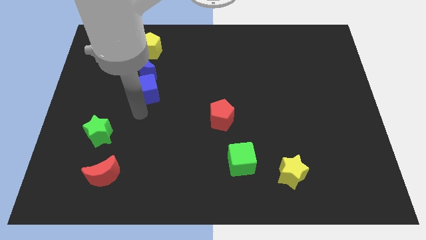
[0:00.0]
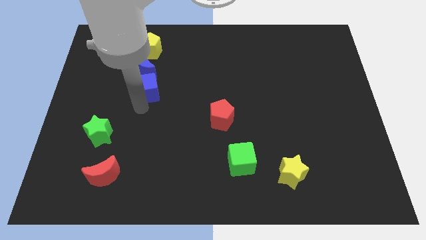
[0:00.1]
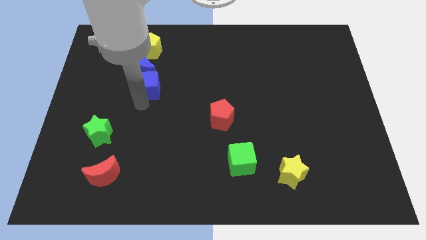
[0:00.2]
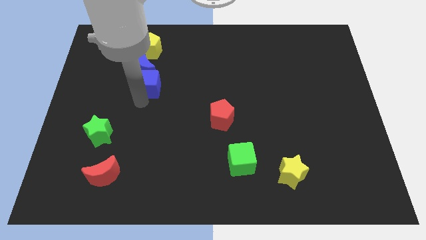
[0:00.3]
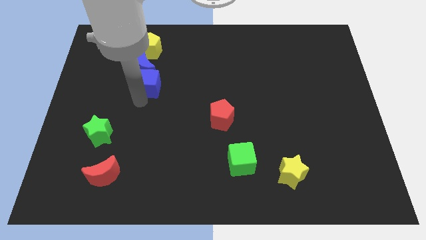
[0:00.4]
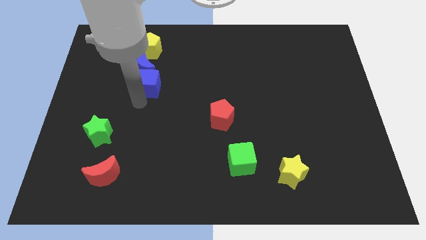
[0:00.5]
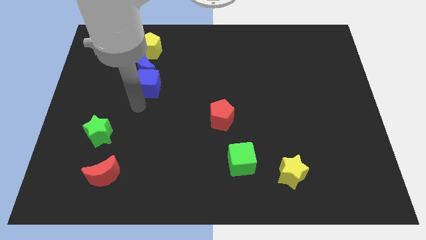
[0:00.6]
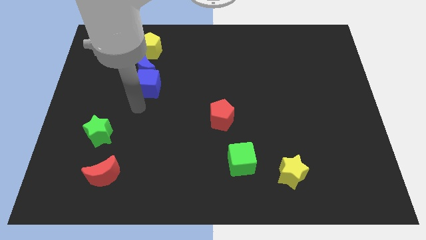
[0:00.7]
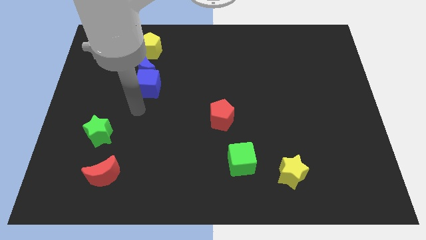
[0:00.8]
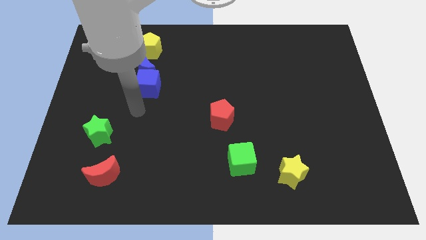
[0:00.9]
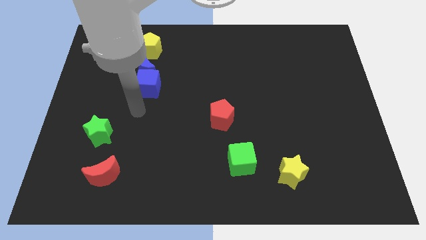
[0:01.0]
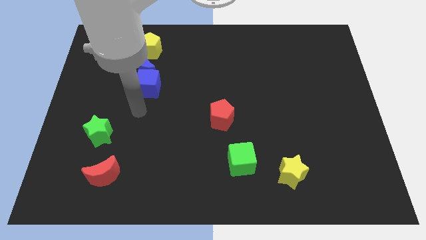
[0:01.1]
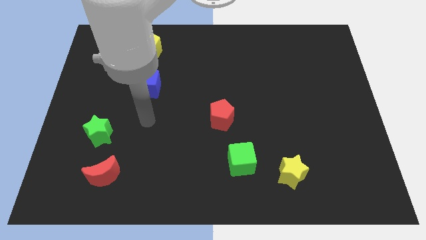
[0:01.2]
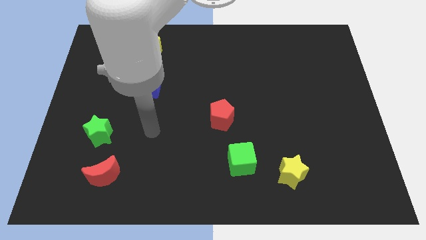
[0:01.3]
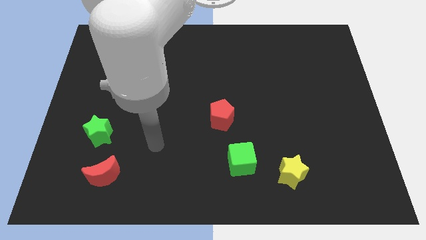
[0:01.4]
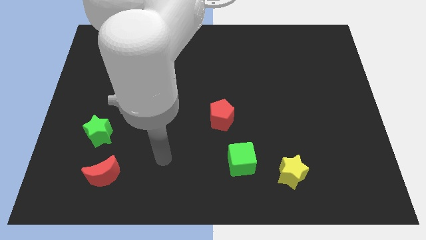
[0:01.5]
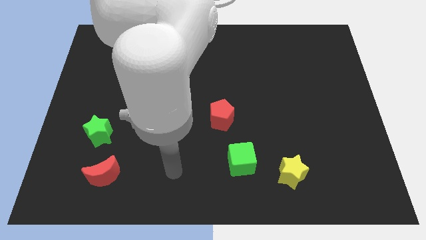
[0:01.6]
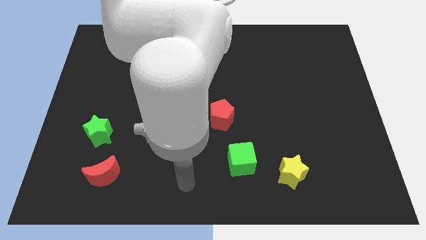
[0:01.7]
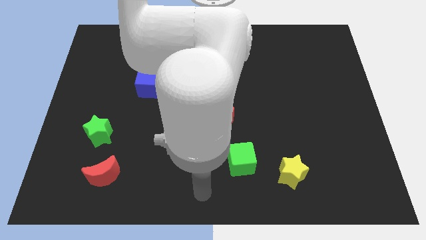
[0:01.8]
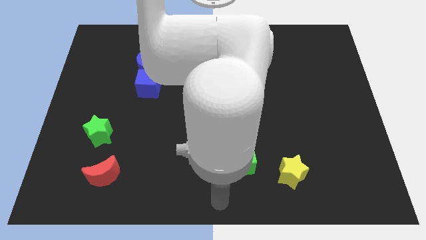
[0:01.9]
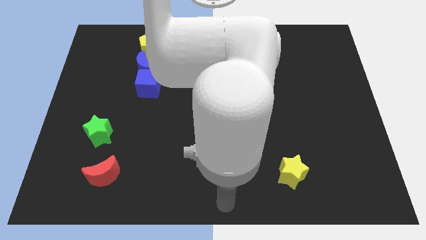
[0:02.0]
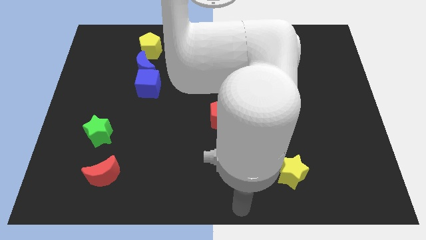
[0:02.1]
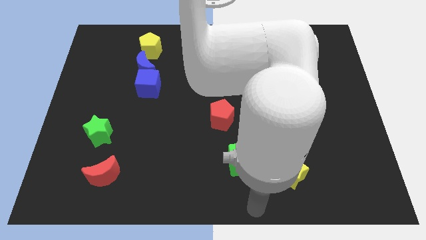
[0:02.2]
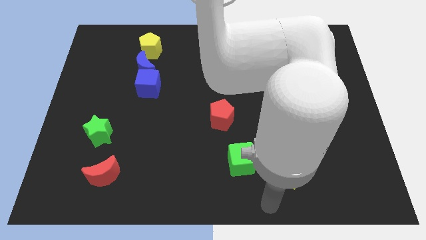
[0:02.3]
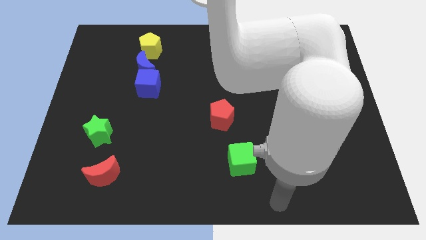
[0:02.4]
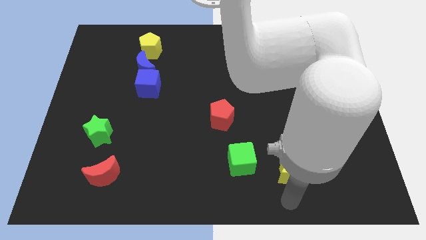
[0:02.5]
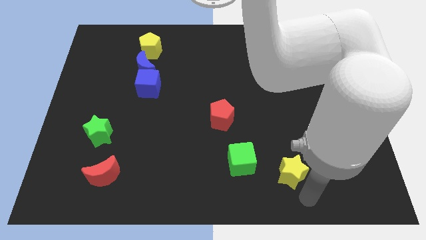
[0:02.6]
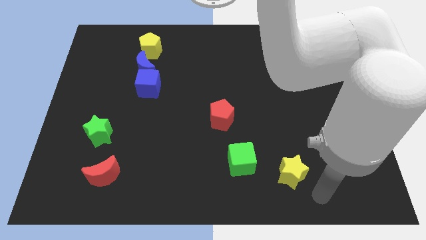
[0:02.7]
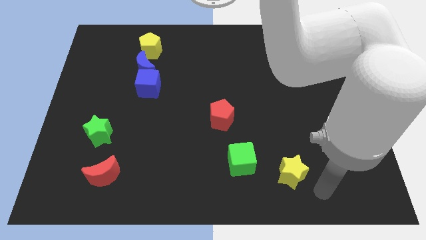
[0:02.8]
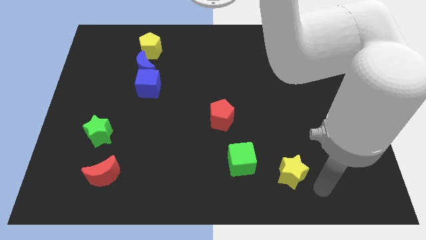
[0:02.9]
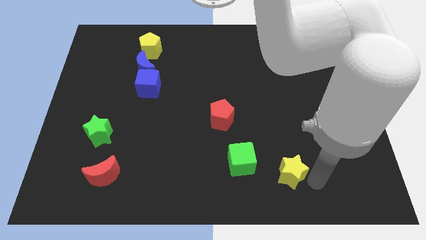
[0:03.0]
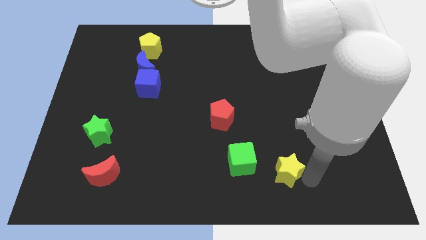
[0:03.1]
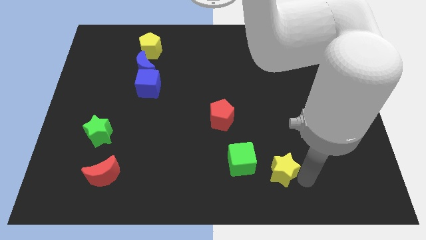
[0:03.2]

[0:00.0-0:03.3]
move your arm to the right of yellow star

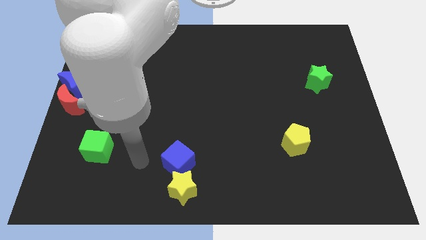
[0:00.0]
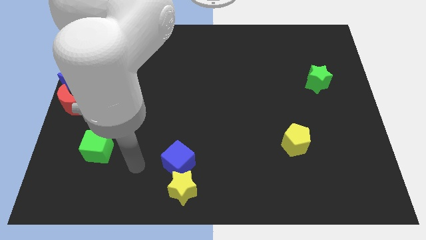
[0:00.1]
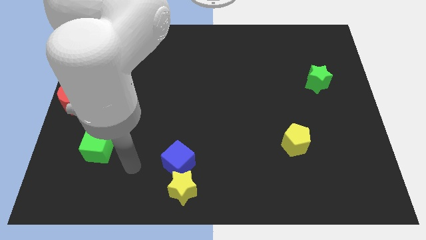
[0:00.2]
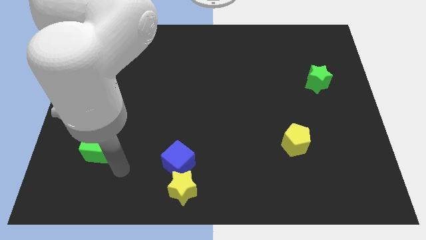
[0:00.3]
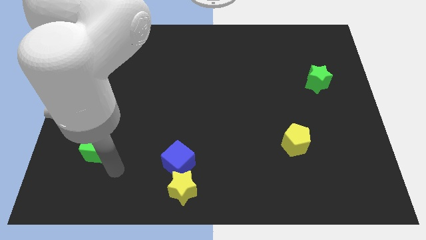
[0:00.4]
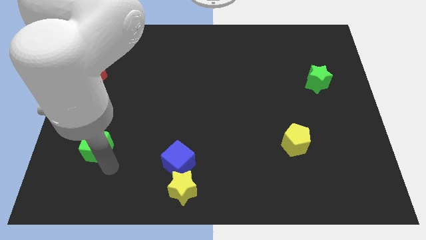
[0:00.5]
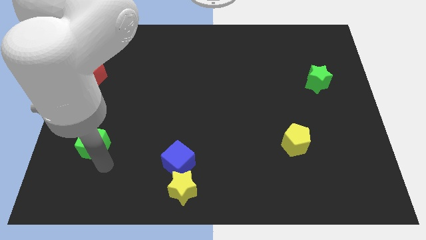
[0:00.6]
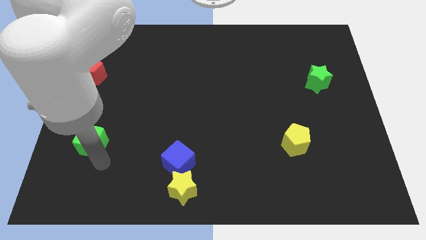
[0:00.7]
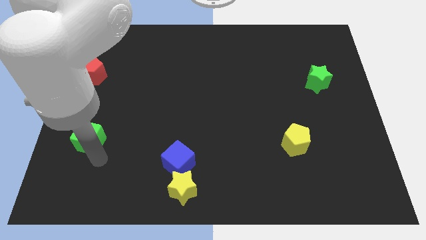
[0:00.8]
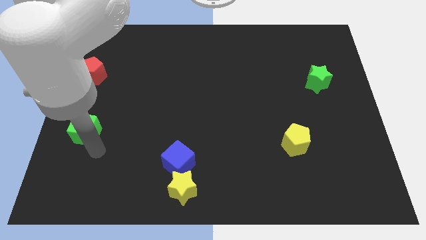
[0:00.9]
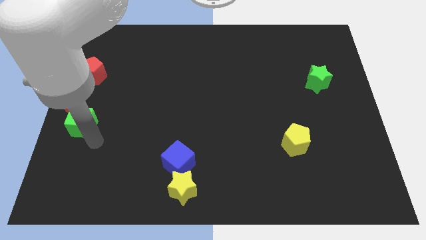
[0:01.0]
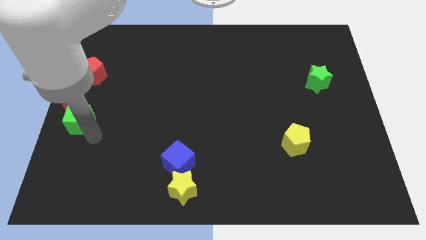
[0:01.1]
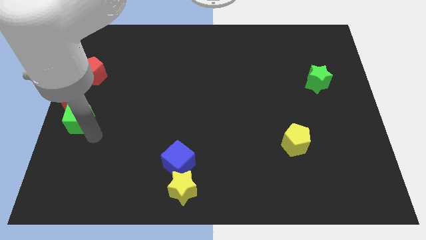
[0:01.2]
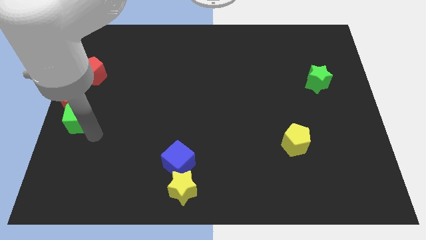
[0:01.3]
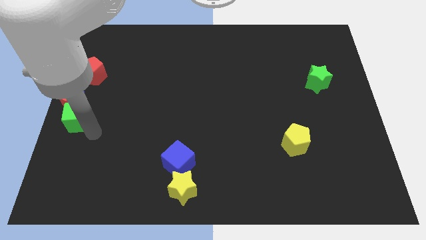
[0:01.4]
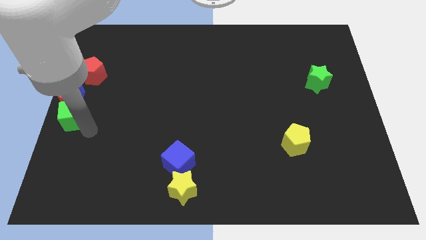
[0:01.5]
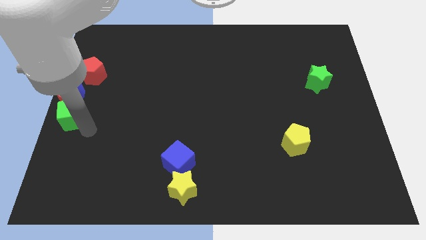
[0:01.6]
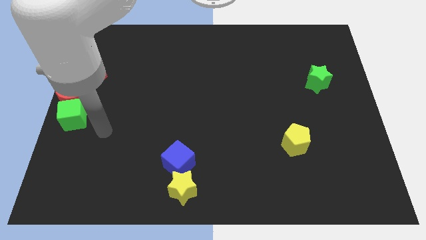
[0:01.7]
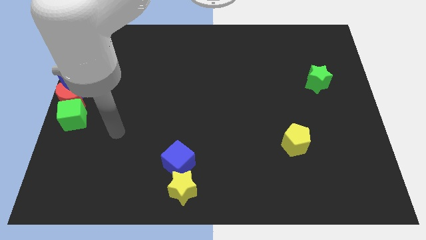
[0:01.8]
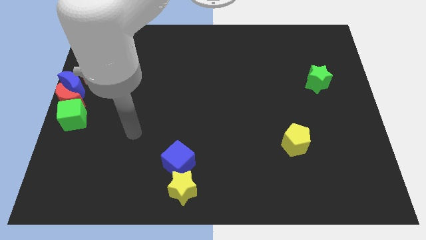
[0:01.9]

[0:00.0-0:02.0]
move the green cube vertically at the bottom of the red crescent

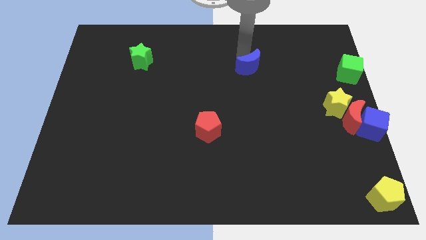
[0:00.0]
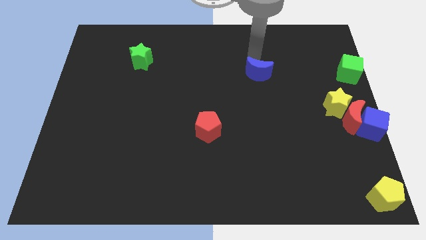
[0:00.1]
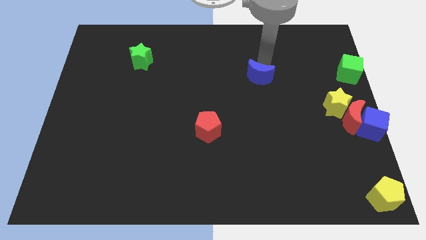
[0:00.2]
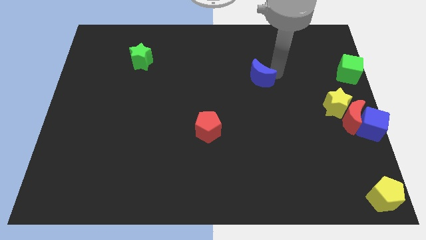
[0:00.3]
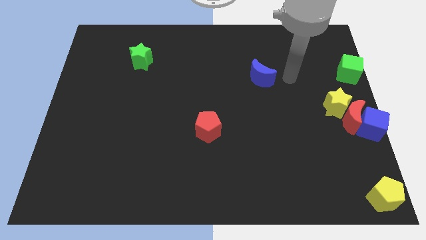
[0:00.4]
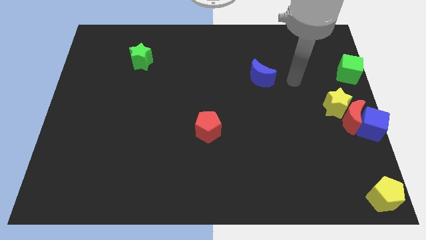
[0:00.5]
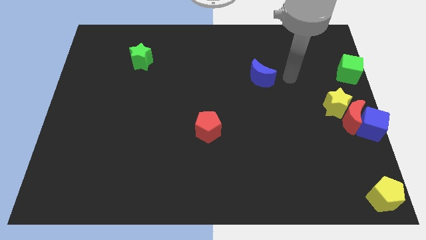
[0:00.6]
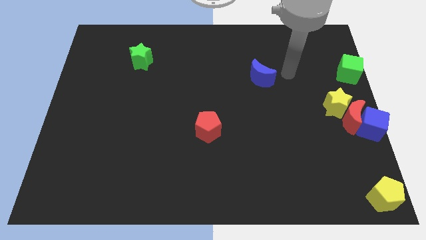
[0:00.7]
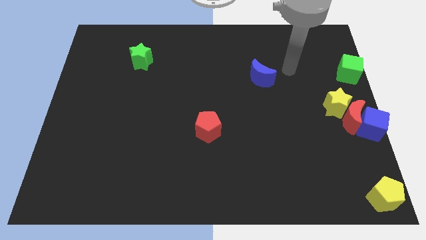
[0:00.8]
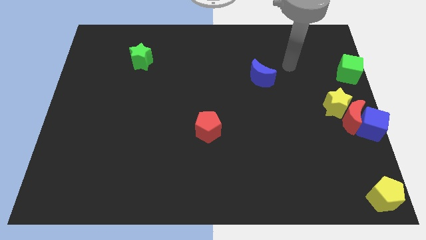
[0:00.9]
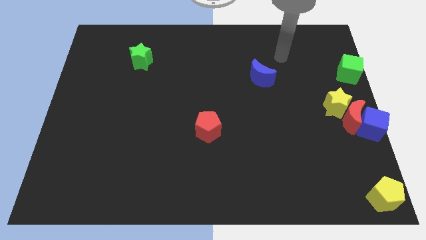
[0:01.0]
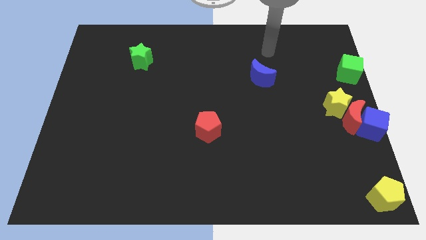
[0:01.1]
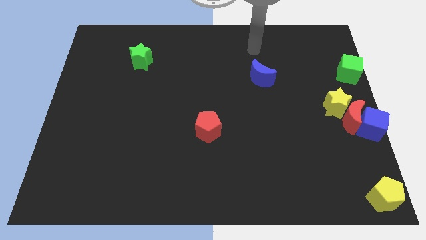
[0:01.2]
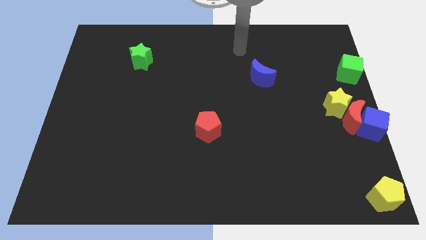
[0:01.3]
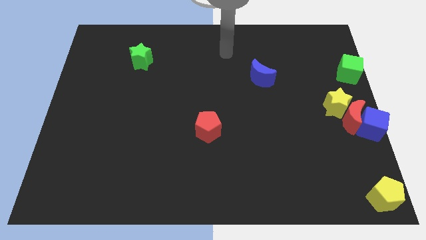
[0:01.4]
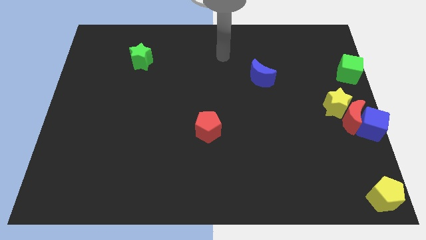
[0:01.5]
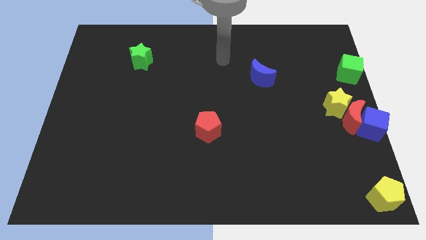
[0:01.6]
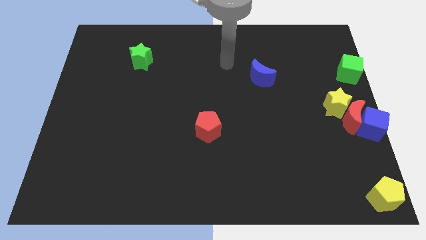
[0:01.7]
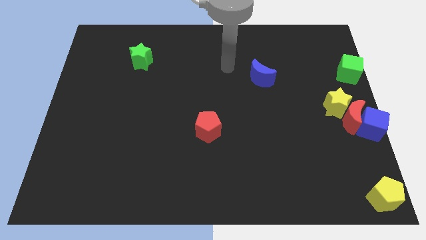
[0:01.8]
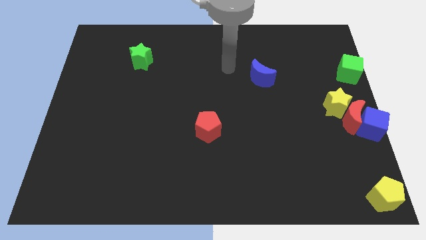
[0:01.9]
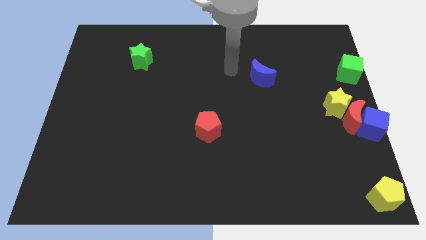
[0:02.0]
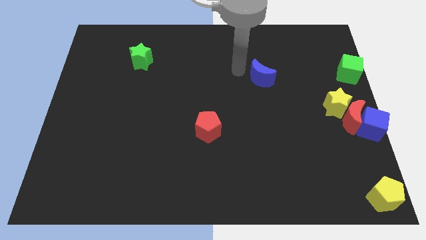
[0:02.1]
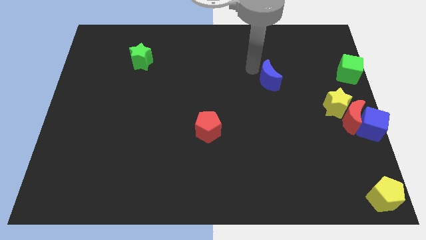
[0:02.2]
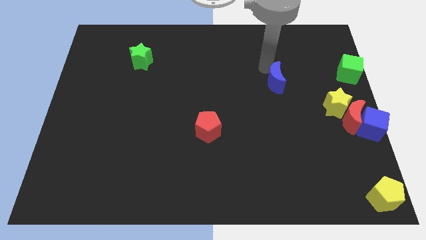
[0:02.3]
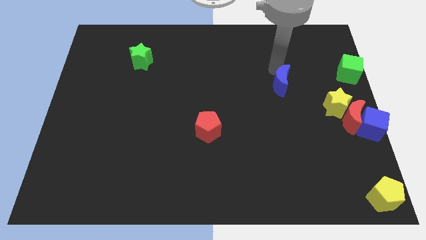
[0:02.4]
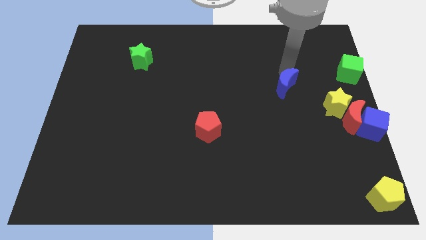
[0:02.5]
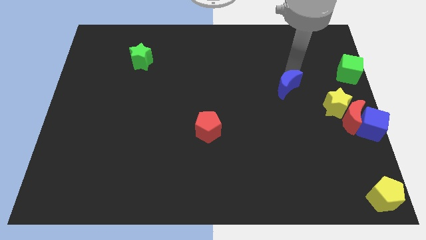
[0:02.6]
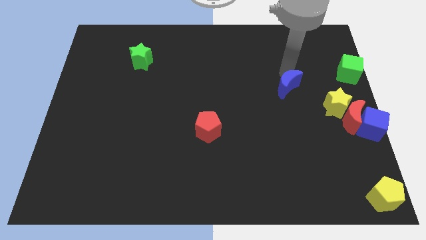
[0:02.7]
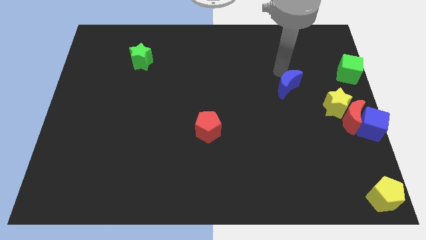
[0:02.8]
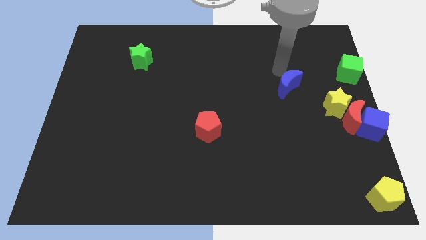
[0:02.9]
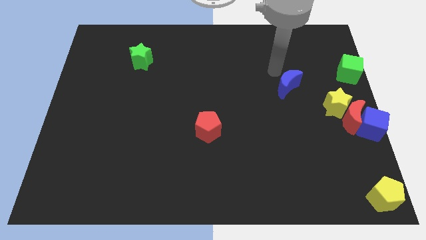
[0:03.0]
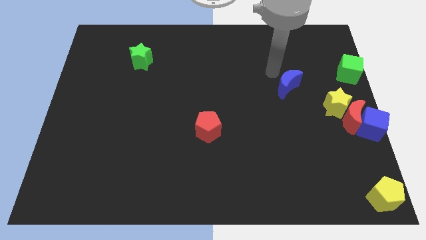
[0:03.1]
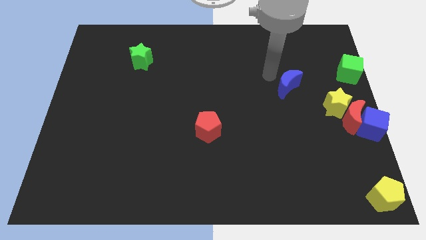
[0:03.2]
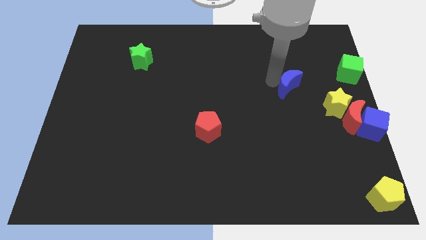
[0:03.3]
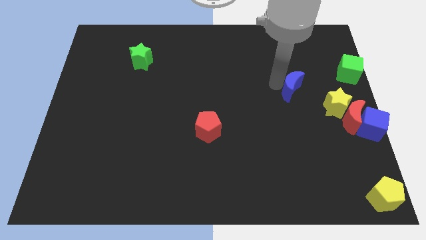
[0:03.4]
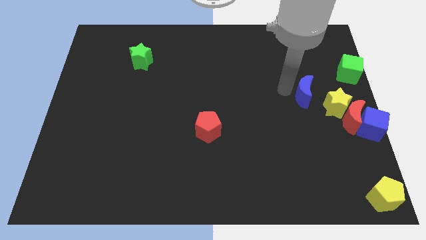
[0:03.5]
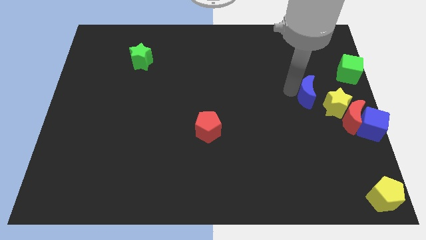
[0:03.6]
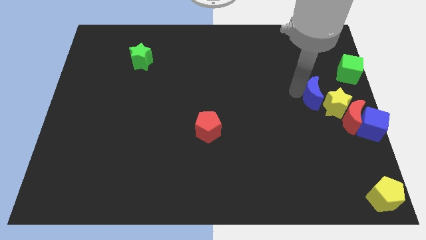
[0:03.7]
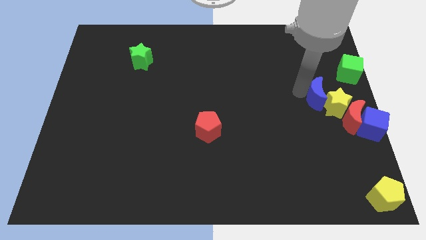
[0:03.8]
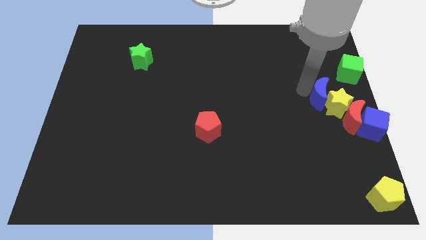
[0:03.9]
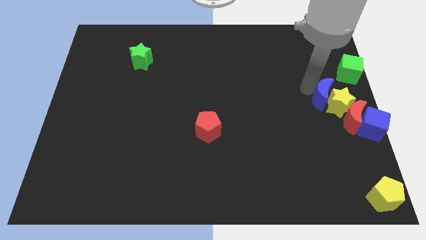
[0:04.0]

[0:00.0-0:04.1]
push the blue crescent to the left of the yellow star
